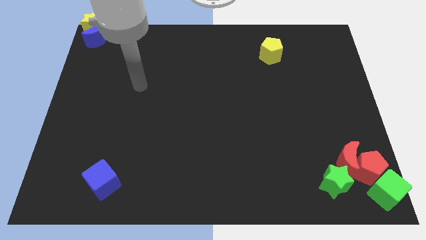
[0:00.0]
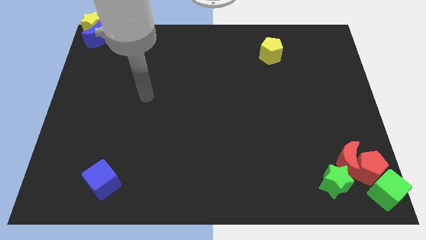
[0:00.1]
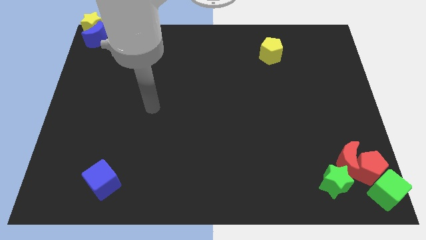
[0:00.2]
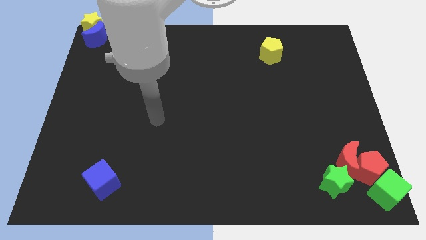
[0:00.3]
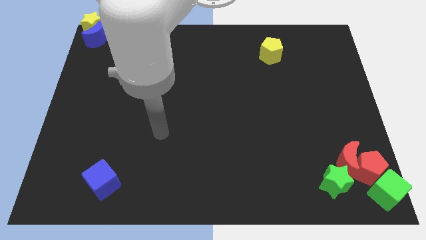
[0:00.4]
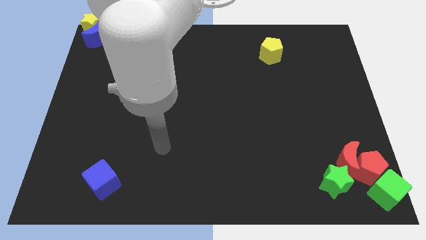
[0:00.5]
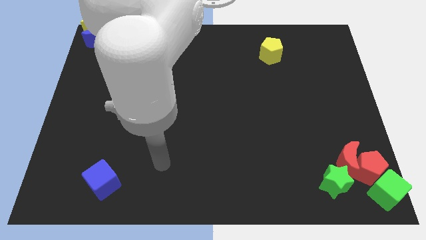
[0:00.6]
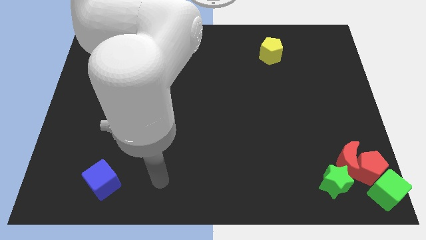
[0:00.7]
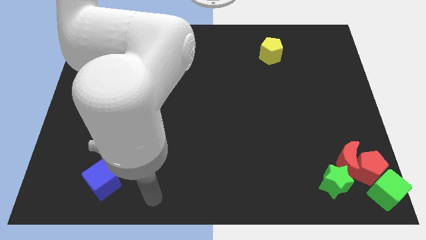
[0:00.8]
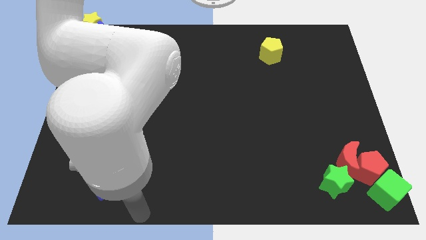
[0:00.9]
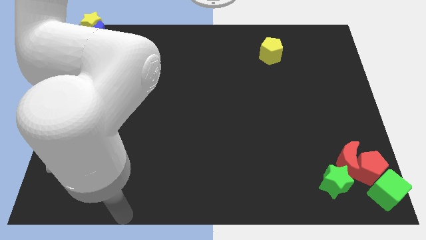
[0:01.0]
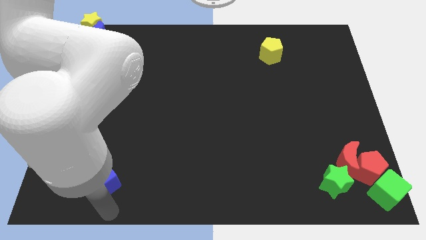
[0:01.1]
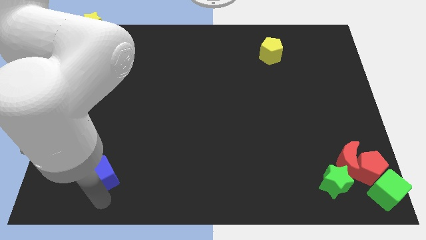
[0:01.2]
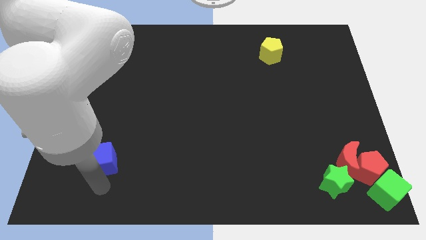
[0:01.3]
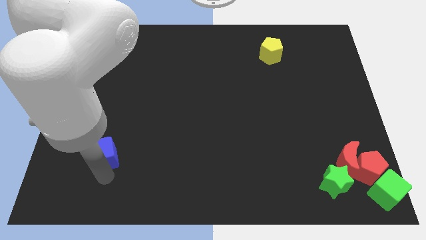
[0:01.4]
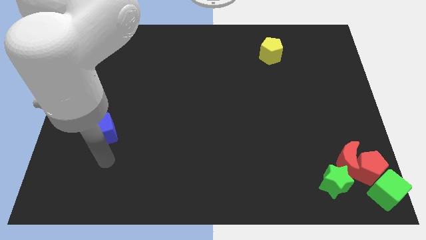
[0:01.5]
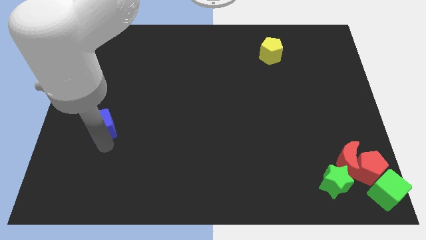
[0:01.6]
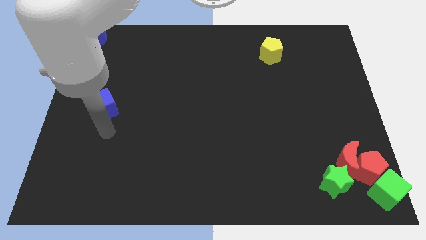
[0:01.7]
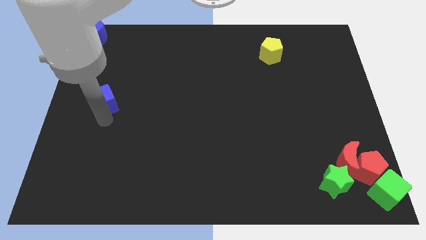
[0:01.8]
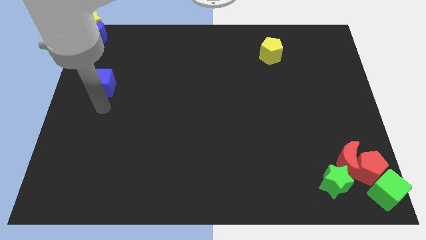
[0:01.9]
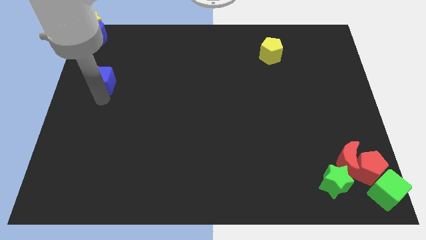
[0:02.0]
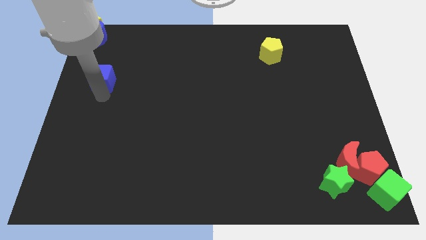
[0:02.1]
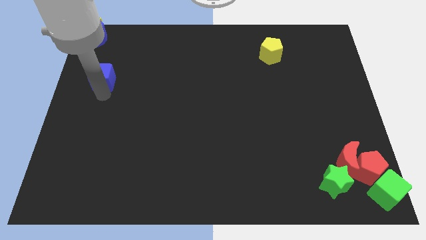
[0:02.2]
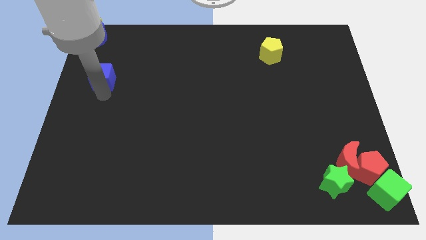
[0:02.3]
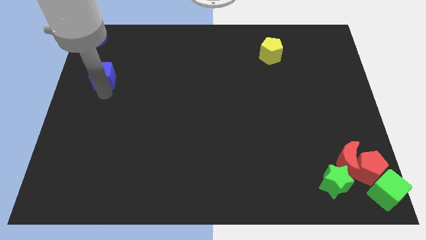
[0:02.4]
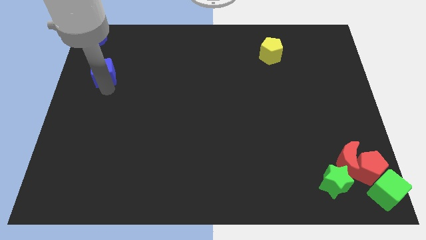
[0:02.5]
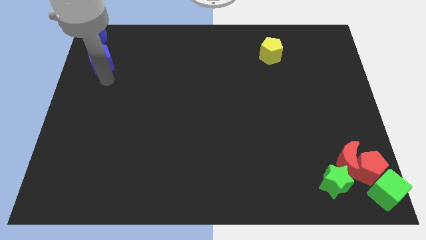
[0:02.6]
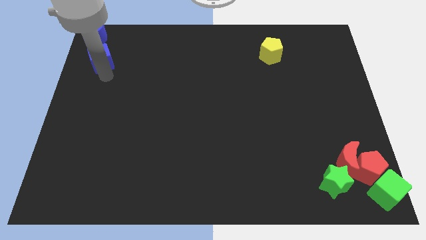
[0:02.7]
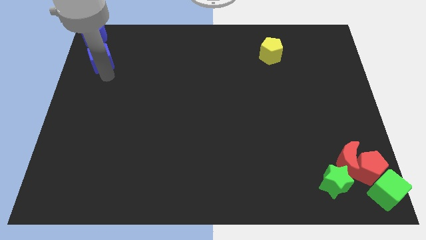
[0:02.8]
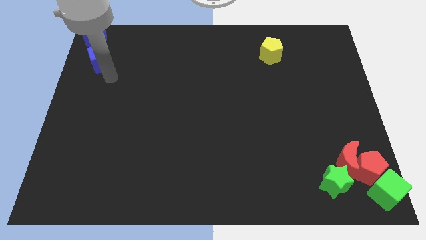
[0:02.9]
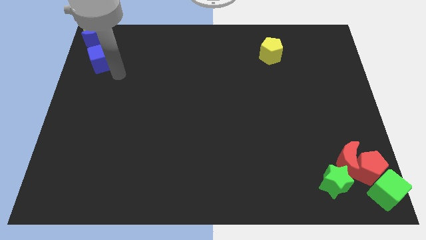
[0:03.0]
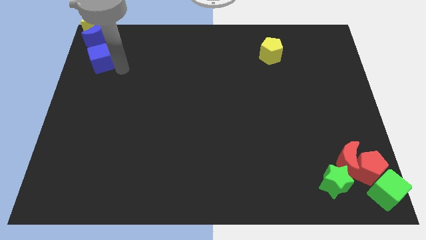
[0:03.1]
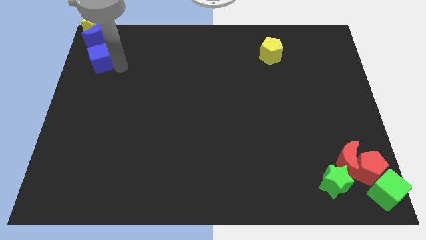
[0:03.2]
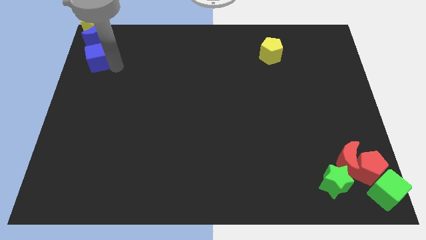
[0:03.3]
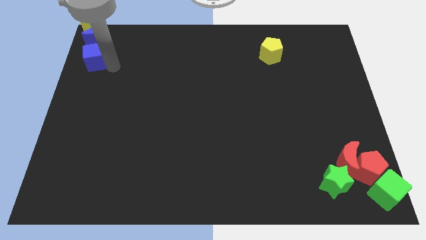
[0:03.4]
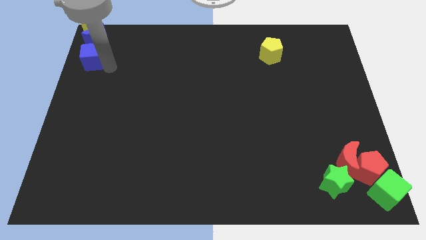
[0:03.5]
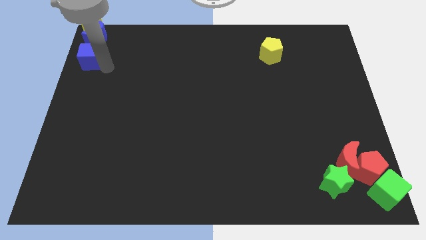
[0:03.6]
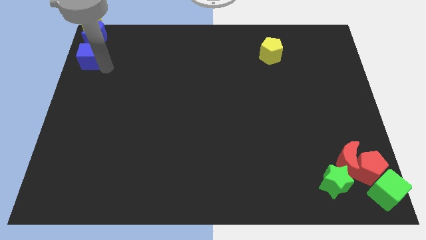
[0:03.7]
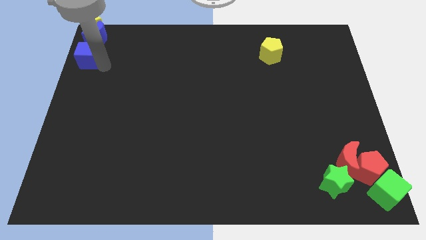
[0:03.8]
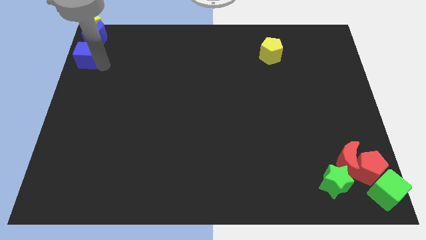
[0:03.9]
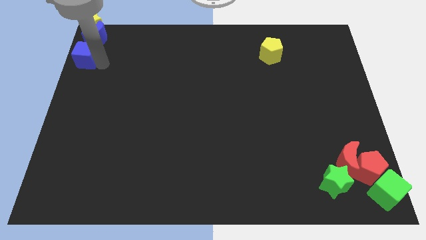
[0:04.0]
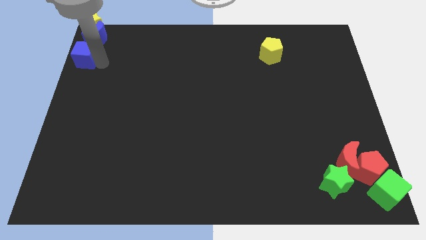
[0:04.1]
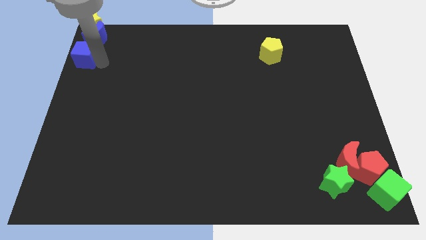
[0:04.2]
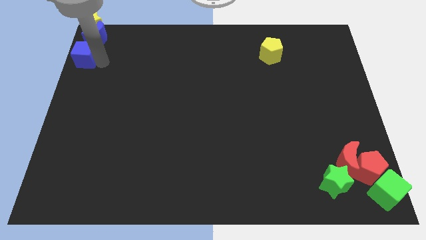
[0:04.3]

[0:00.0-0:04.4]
move the blue cube to the bottom of the blue crescent

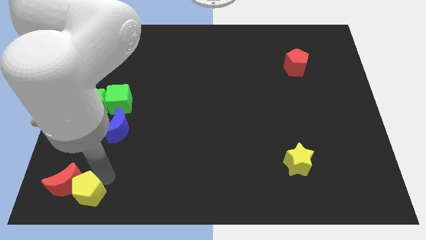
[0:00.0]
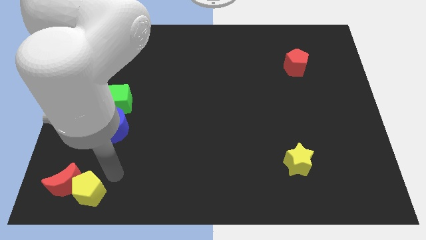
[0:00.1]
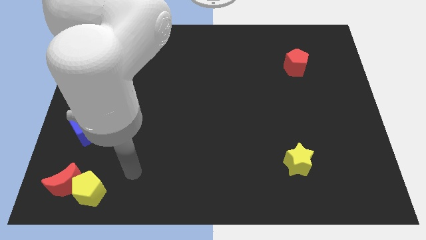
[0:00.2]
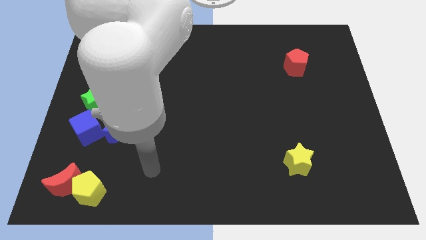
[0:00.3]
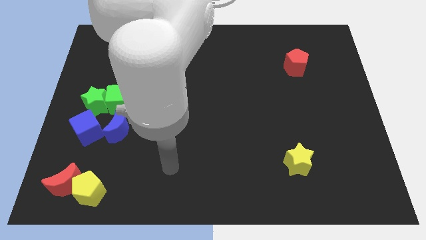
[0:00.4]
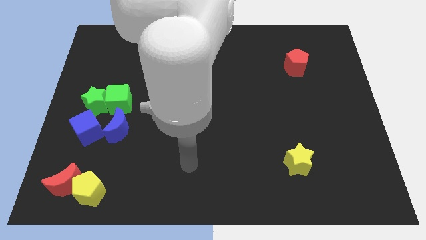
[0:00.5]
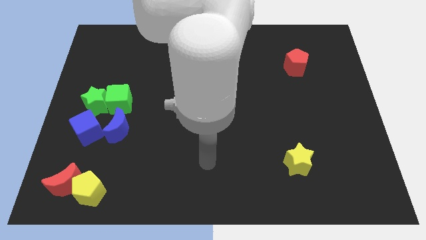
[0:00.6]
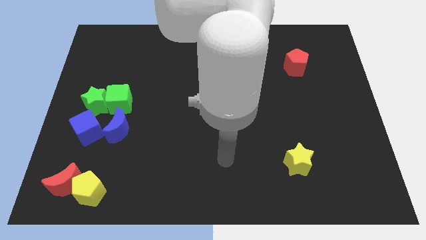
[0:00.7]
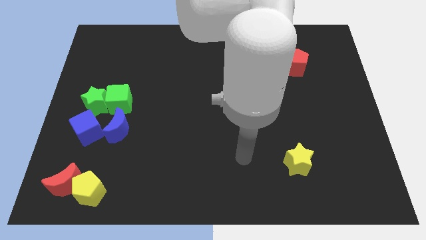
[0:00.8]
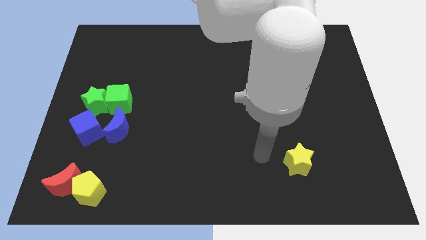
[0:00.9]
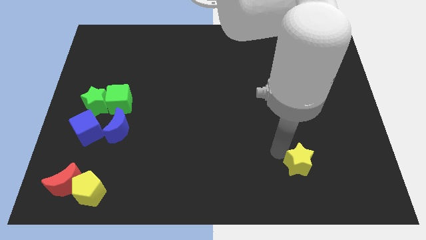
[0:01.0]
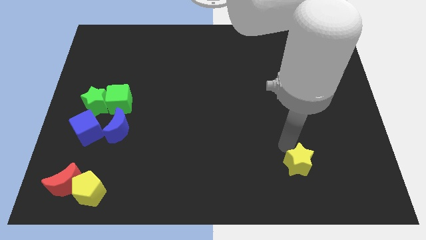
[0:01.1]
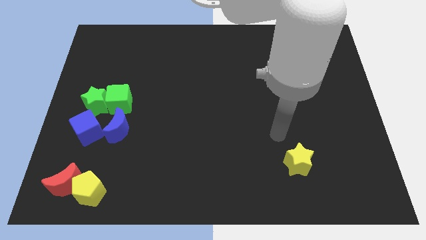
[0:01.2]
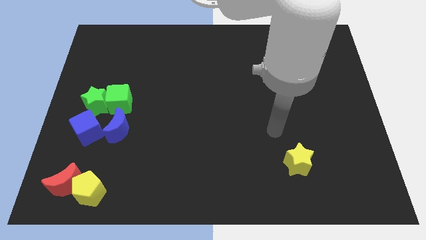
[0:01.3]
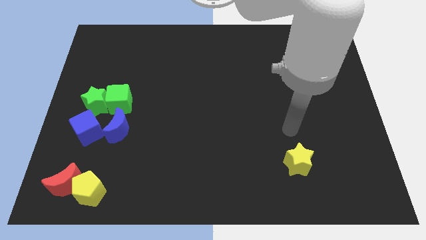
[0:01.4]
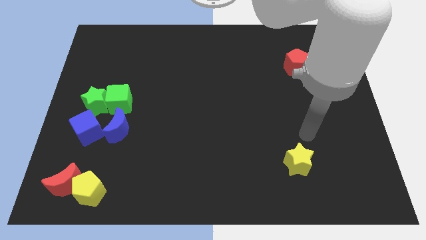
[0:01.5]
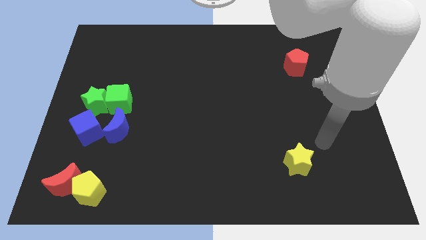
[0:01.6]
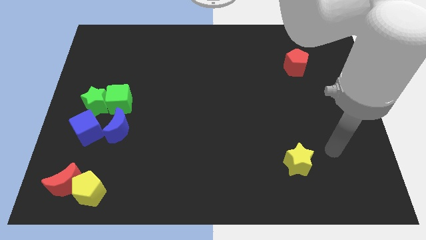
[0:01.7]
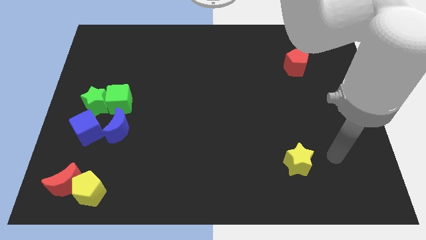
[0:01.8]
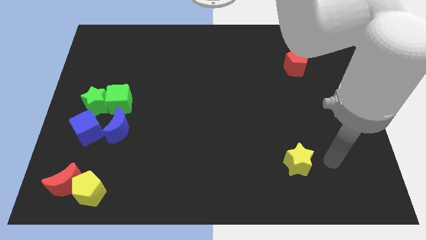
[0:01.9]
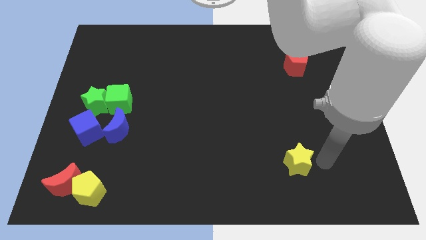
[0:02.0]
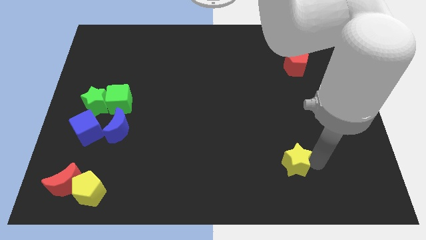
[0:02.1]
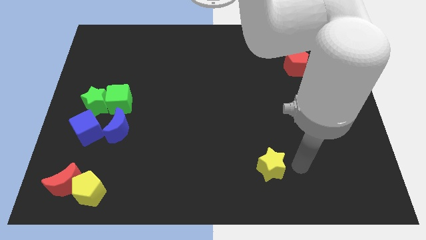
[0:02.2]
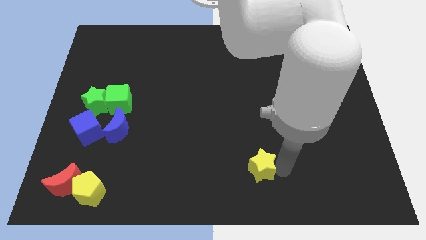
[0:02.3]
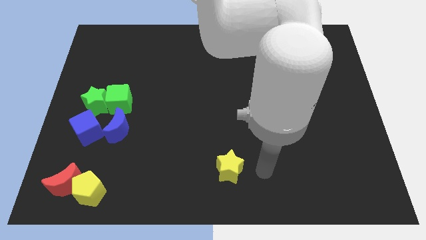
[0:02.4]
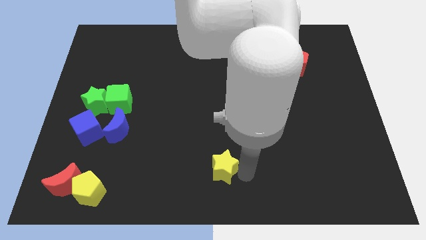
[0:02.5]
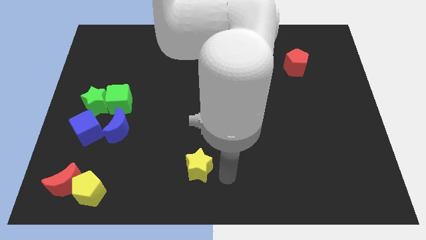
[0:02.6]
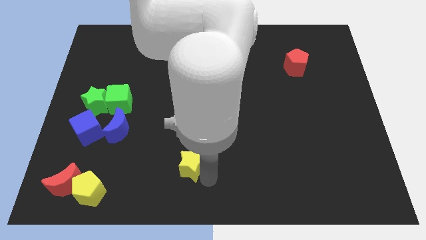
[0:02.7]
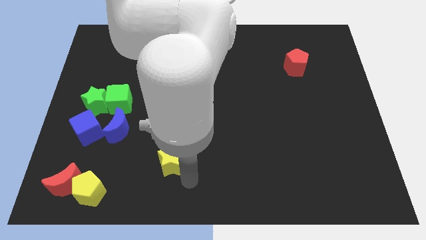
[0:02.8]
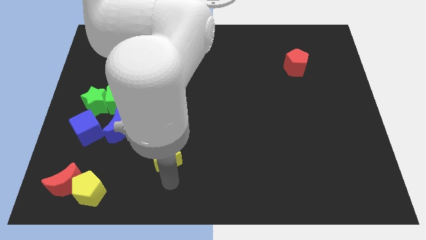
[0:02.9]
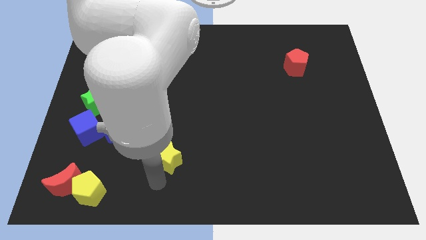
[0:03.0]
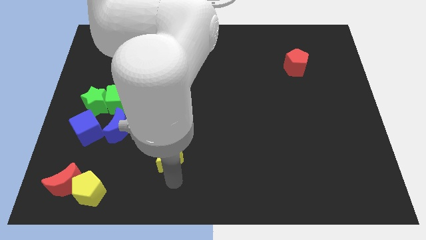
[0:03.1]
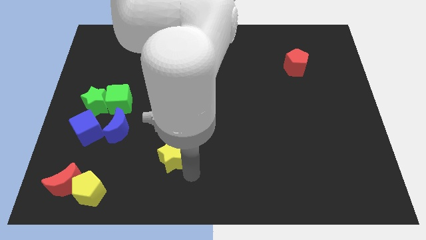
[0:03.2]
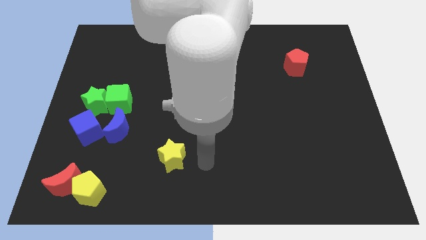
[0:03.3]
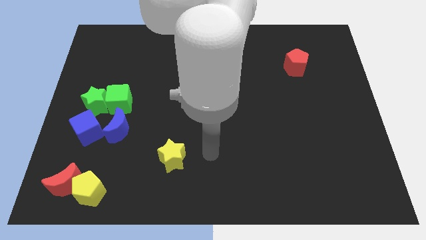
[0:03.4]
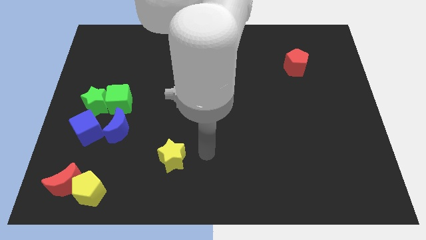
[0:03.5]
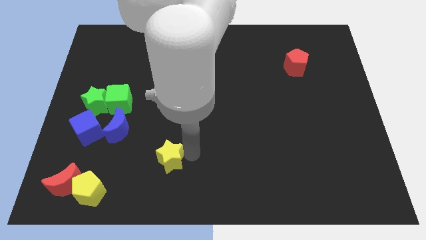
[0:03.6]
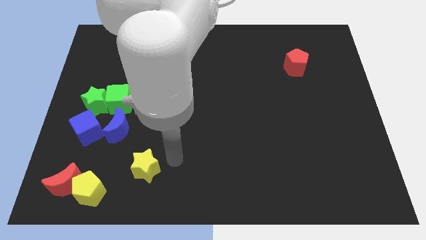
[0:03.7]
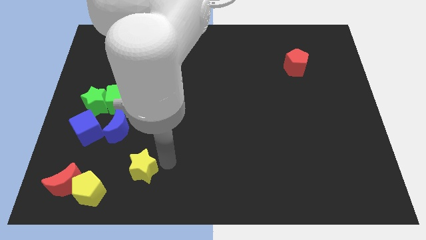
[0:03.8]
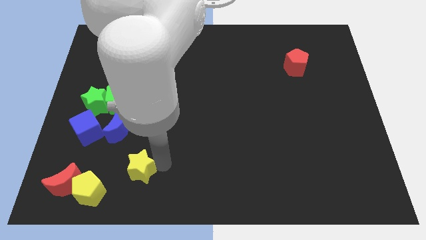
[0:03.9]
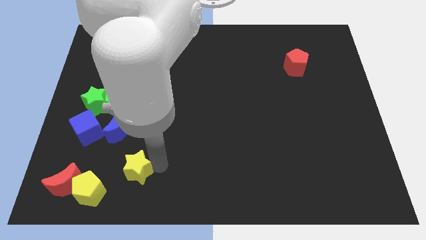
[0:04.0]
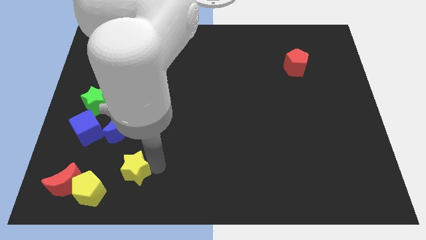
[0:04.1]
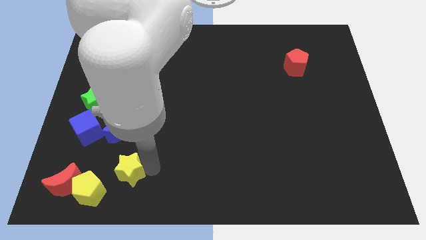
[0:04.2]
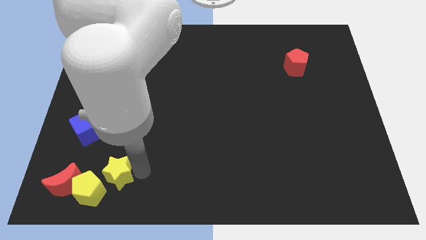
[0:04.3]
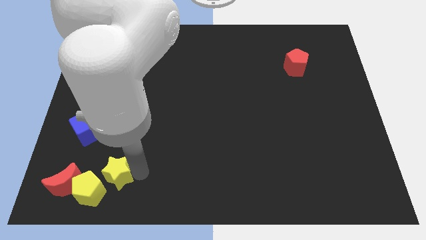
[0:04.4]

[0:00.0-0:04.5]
slide the yellow star close to the top right side of the yellow pentagon

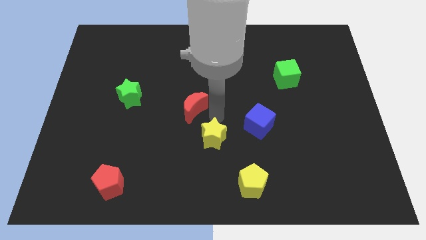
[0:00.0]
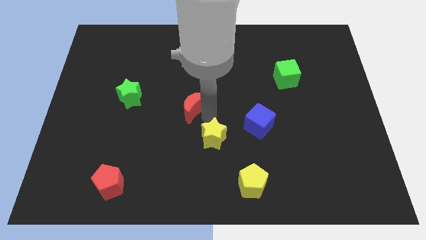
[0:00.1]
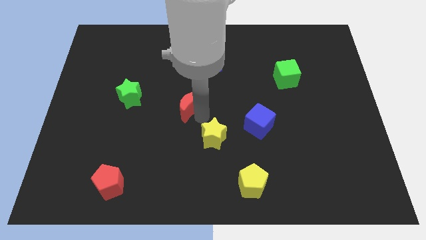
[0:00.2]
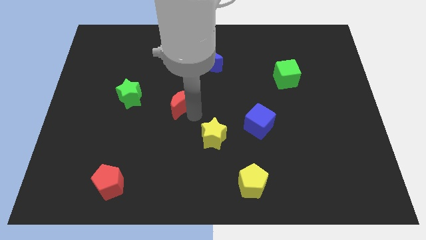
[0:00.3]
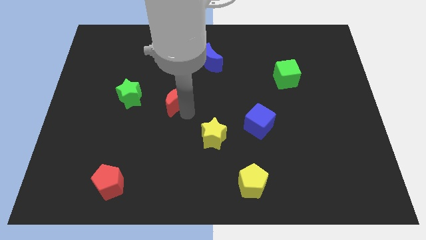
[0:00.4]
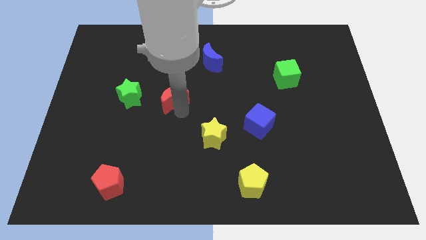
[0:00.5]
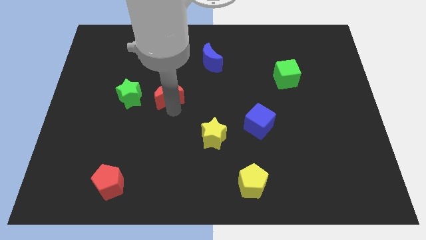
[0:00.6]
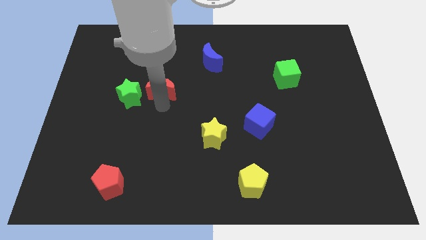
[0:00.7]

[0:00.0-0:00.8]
move the red crescent to the right of the green star
